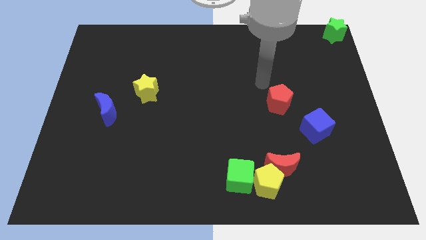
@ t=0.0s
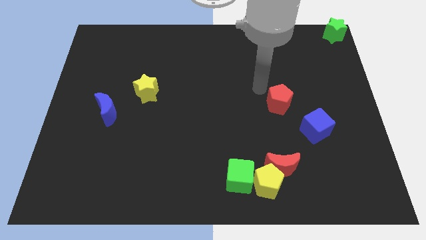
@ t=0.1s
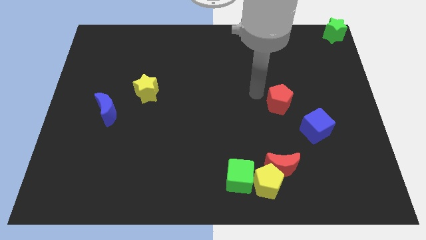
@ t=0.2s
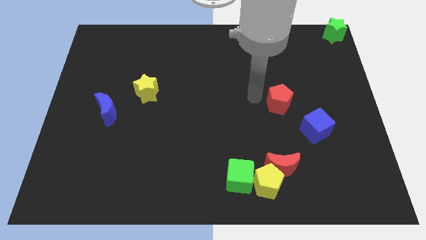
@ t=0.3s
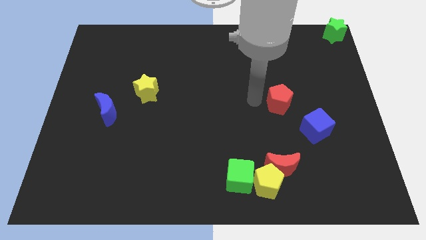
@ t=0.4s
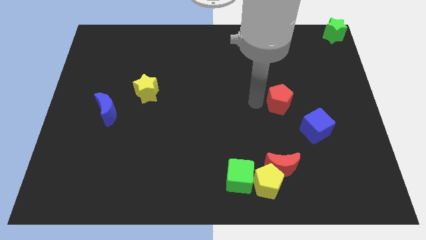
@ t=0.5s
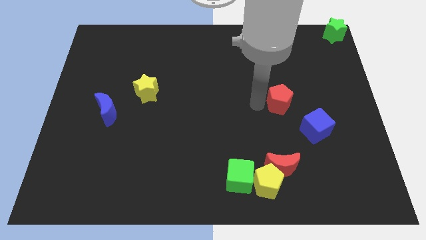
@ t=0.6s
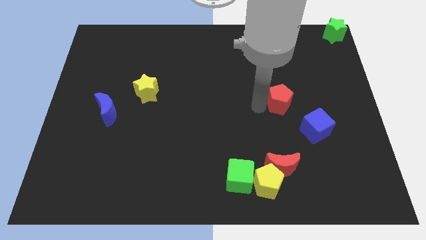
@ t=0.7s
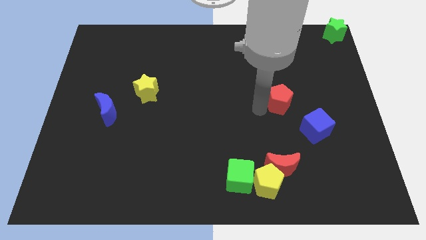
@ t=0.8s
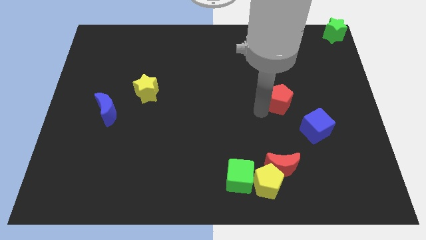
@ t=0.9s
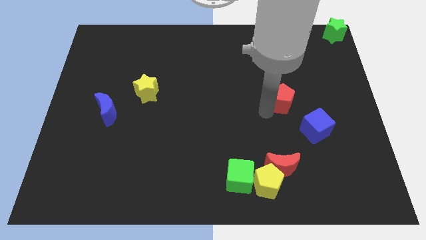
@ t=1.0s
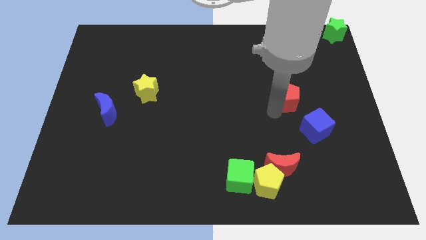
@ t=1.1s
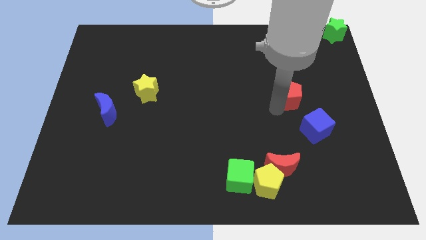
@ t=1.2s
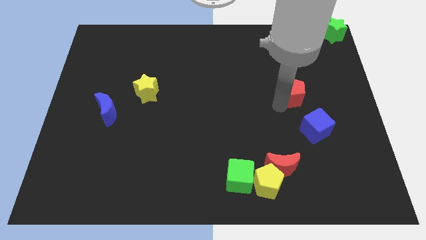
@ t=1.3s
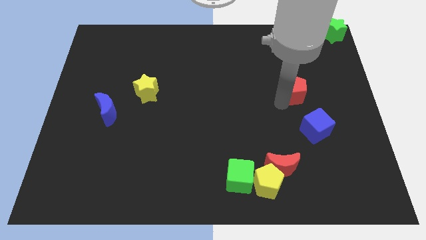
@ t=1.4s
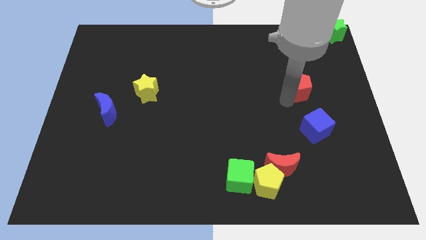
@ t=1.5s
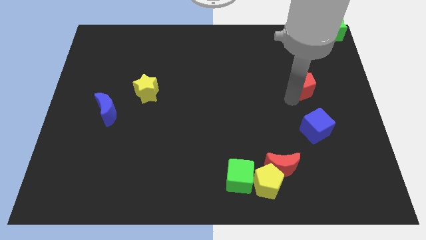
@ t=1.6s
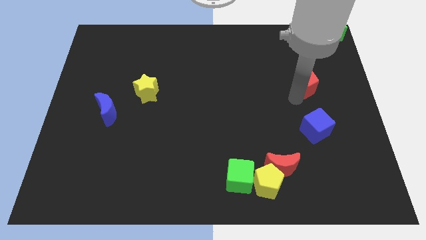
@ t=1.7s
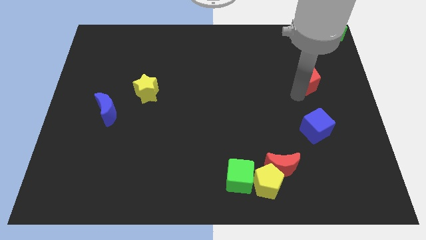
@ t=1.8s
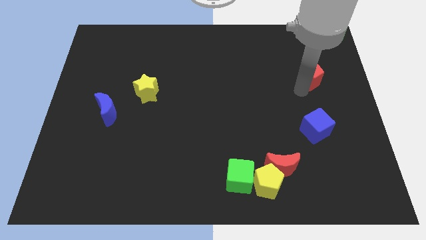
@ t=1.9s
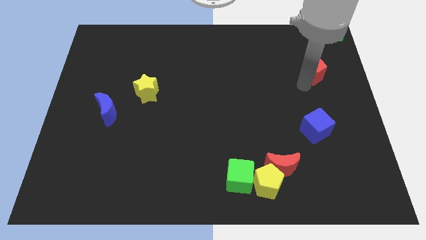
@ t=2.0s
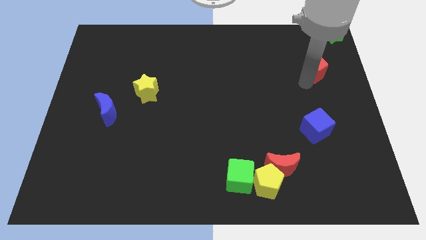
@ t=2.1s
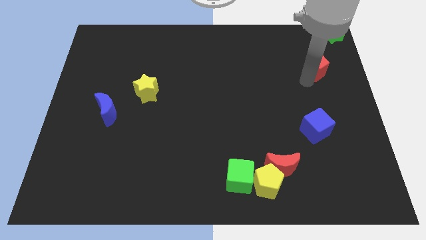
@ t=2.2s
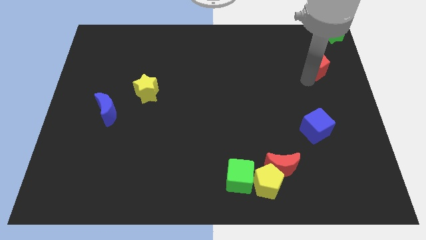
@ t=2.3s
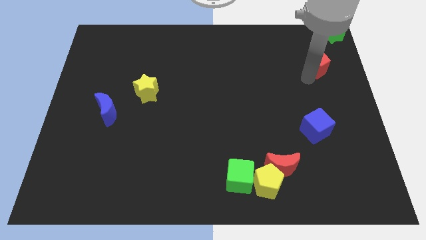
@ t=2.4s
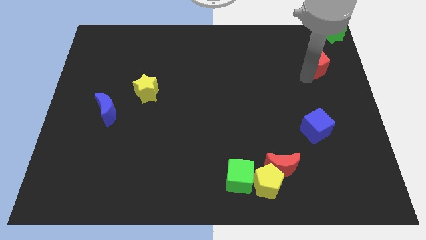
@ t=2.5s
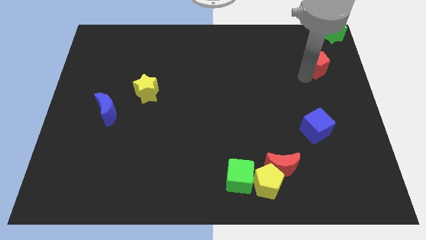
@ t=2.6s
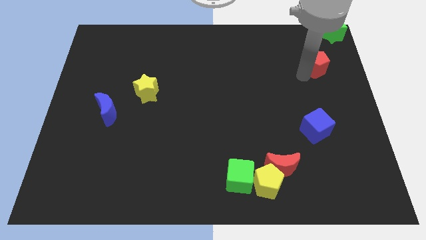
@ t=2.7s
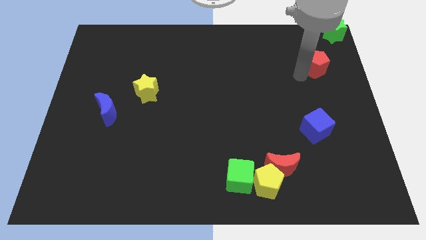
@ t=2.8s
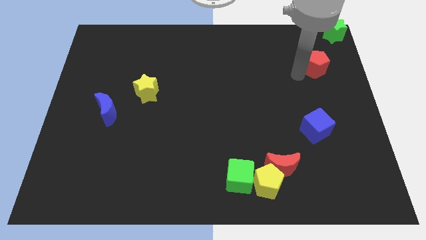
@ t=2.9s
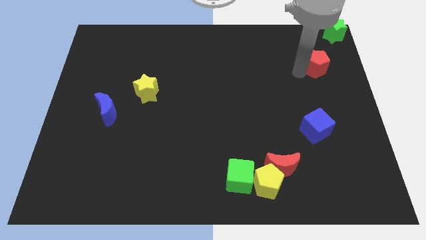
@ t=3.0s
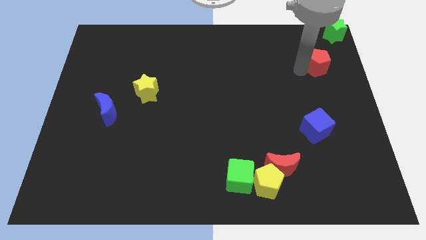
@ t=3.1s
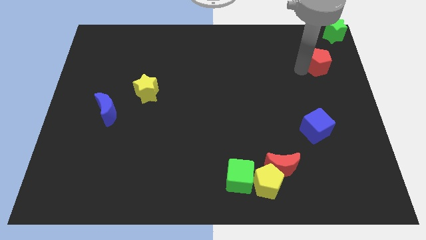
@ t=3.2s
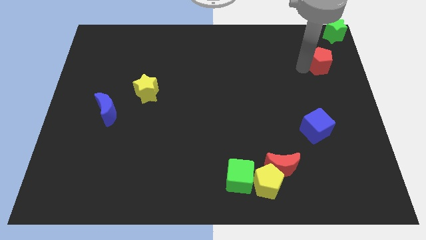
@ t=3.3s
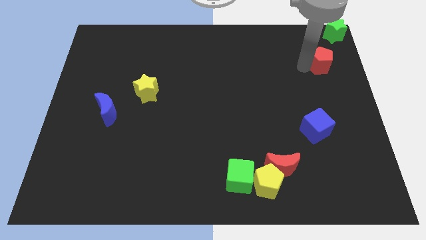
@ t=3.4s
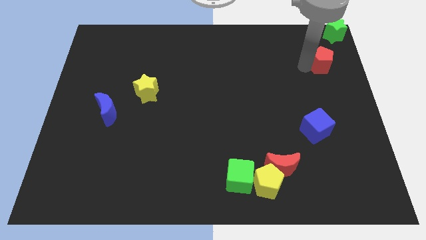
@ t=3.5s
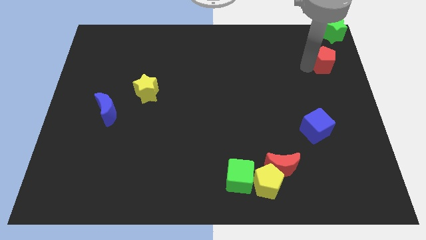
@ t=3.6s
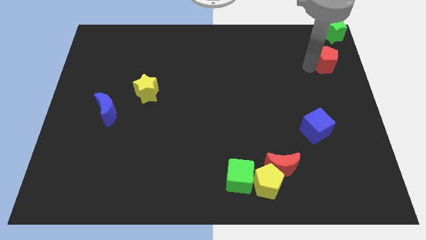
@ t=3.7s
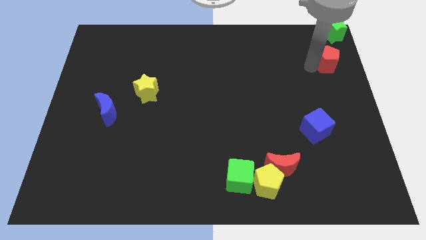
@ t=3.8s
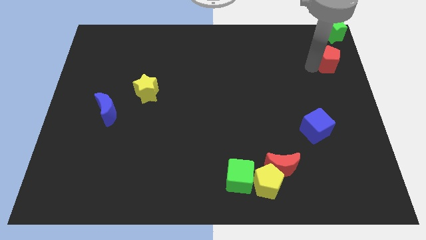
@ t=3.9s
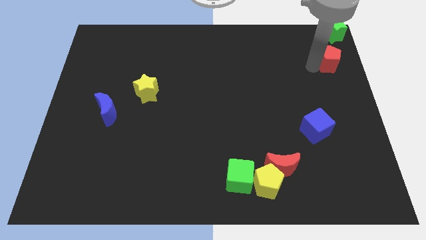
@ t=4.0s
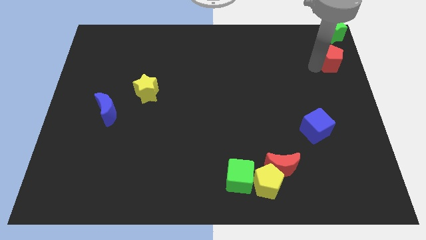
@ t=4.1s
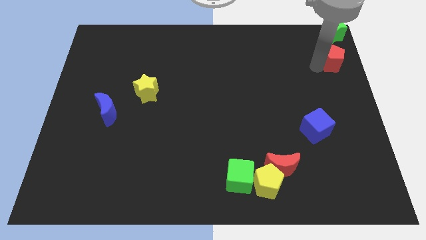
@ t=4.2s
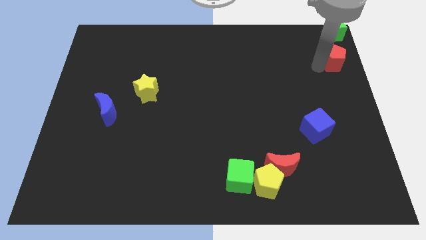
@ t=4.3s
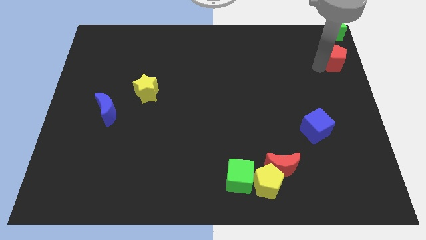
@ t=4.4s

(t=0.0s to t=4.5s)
place the red pentagon below the green star

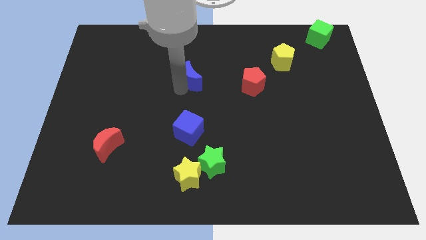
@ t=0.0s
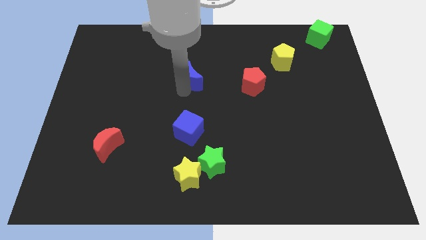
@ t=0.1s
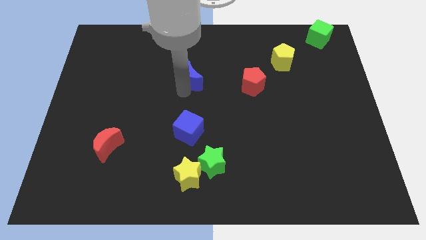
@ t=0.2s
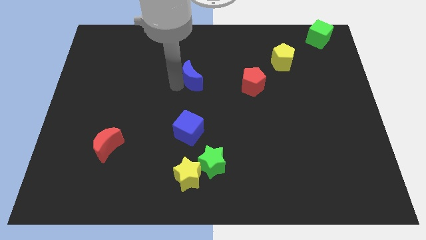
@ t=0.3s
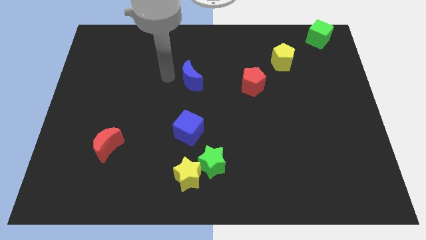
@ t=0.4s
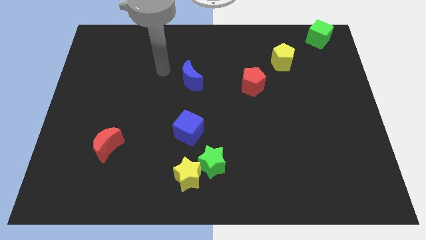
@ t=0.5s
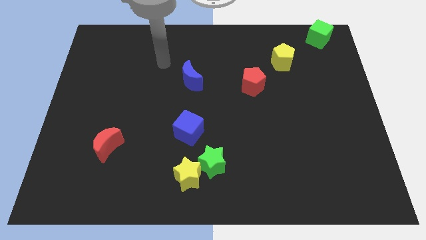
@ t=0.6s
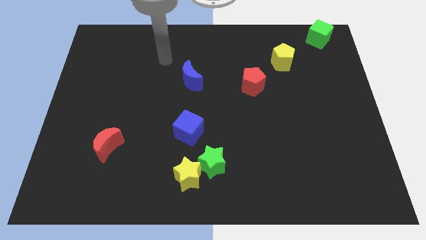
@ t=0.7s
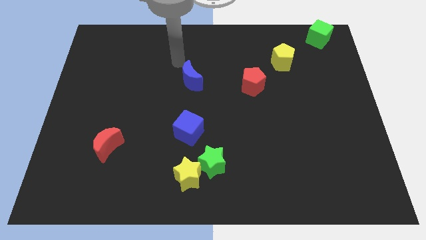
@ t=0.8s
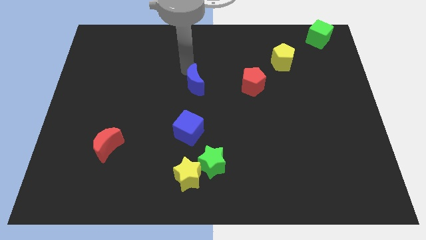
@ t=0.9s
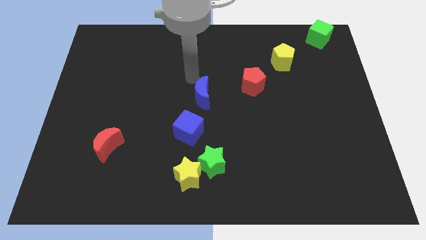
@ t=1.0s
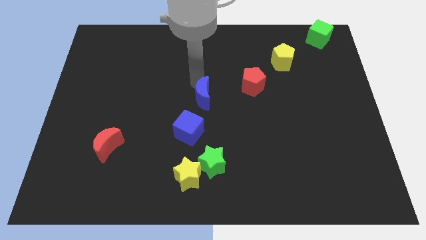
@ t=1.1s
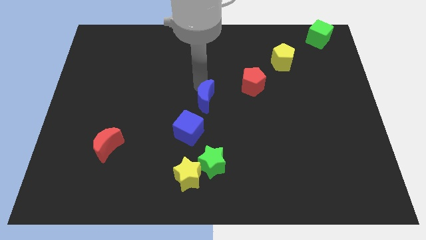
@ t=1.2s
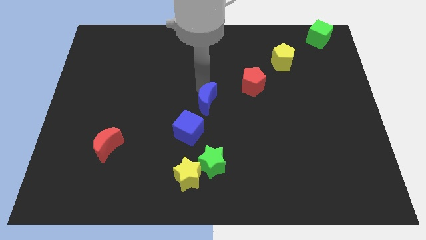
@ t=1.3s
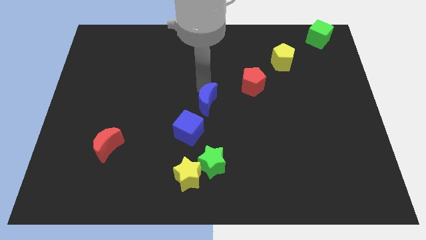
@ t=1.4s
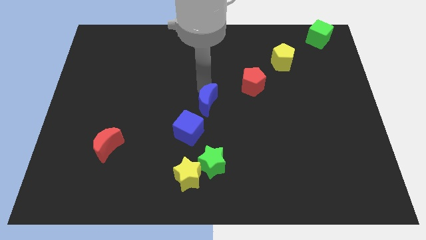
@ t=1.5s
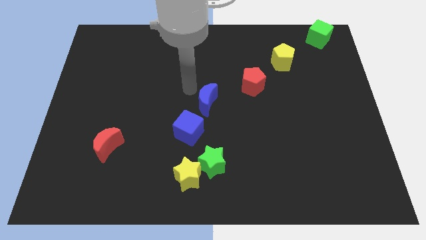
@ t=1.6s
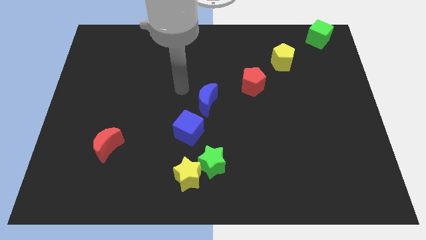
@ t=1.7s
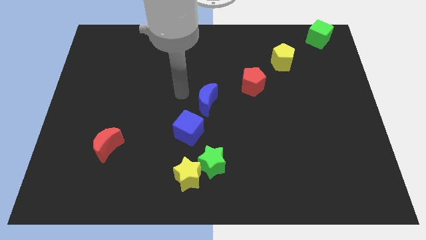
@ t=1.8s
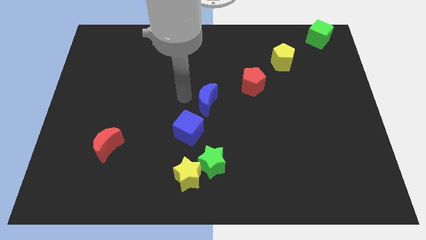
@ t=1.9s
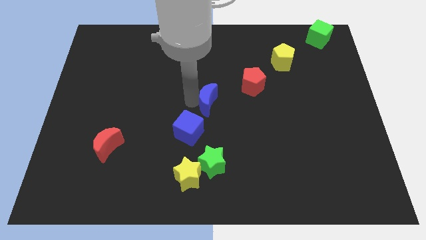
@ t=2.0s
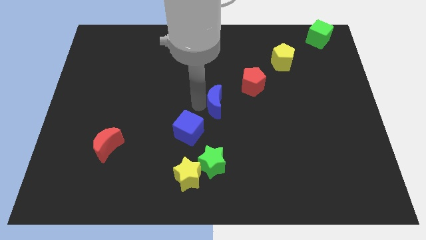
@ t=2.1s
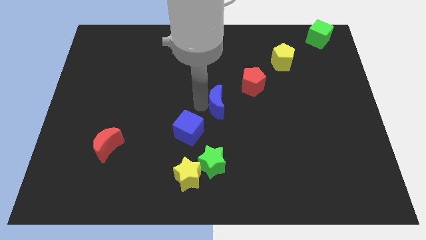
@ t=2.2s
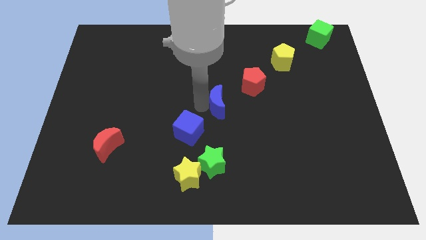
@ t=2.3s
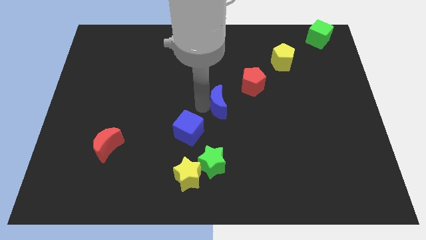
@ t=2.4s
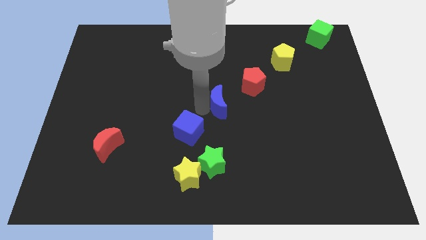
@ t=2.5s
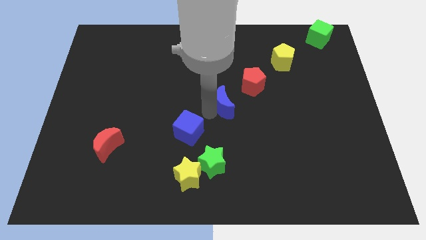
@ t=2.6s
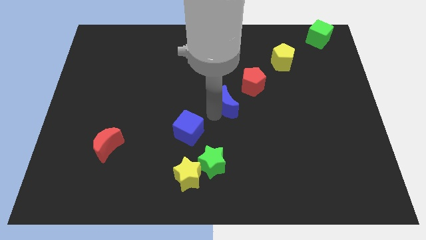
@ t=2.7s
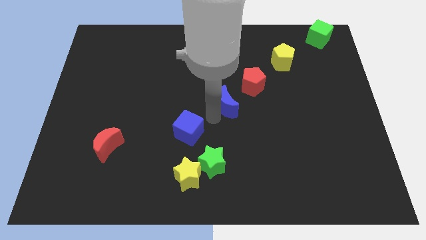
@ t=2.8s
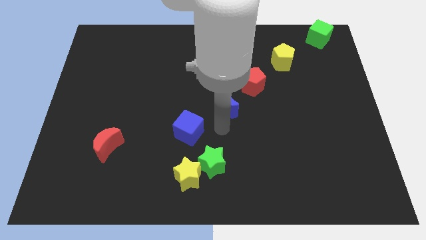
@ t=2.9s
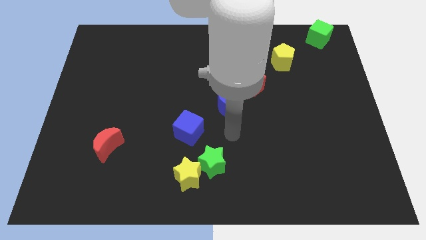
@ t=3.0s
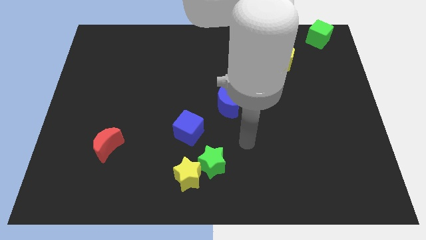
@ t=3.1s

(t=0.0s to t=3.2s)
move the blue crescent below the red pentagon

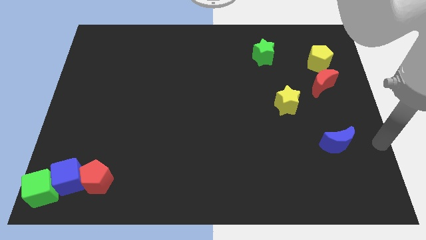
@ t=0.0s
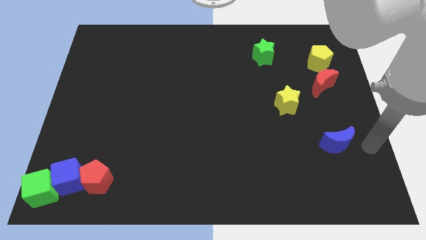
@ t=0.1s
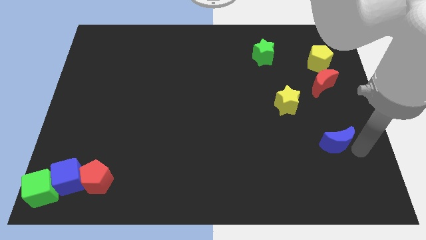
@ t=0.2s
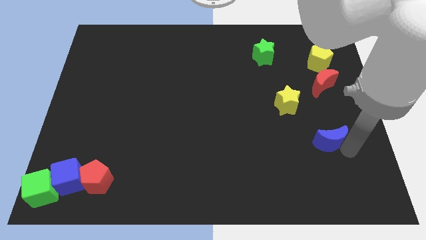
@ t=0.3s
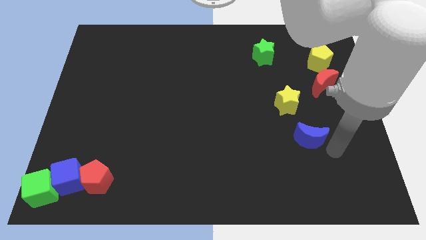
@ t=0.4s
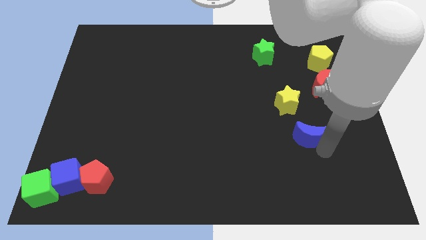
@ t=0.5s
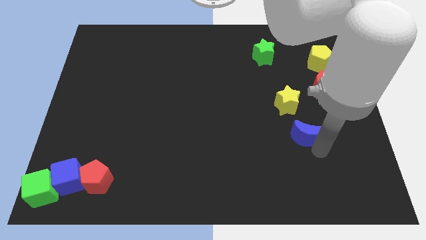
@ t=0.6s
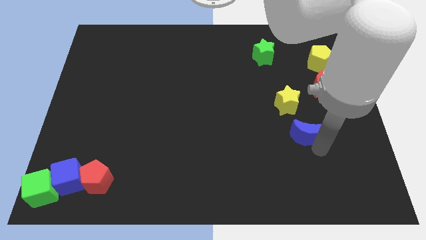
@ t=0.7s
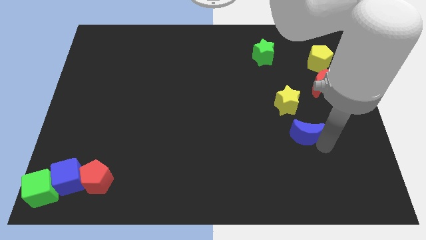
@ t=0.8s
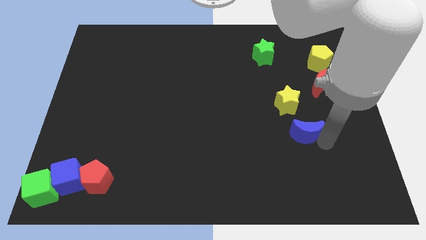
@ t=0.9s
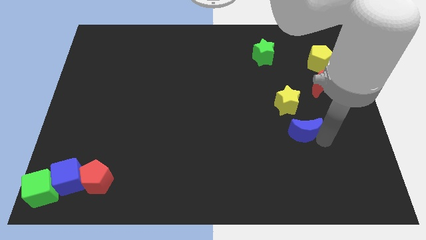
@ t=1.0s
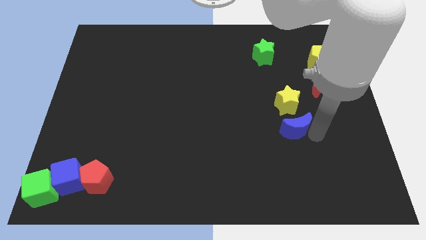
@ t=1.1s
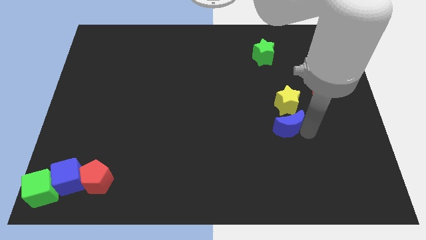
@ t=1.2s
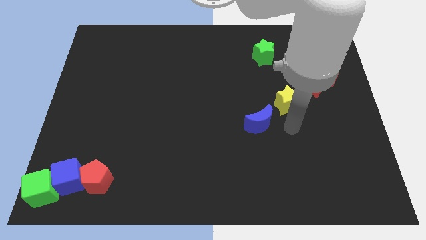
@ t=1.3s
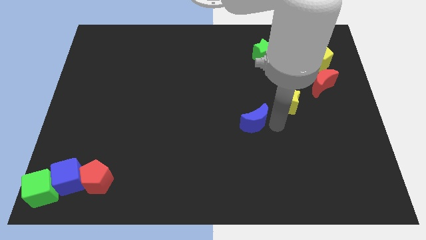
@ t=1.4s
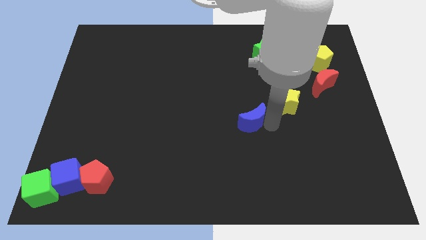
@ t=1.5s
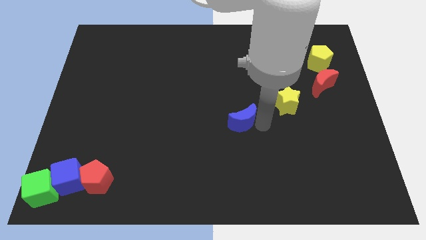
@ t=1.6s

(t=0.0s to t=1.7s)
place the blue moon diagonally to the yellow star
